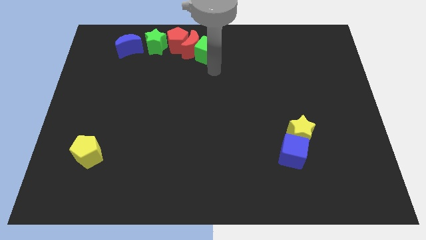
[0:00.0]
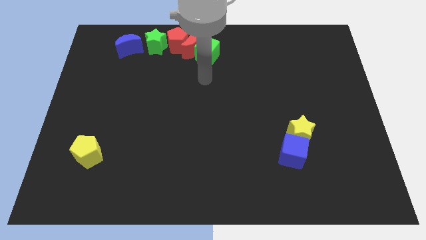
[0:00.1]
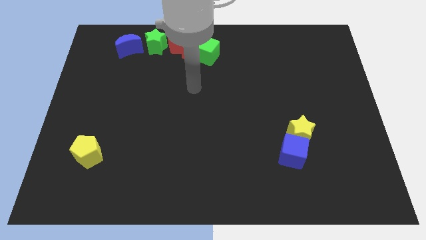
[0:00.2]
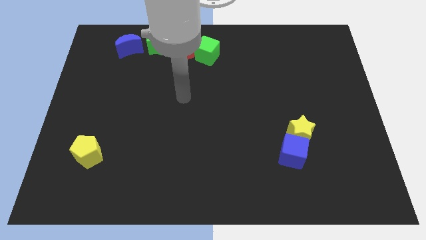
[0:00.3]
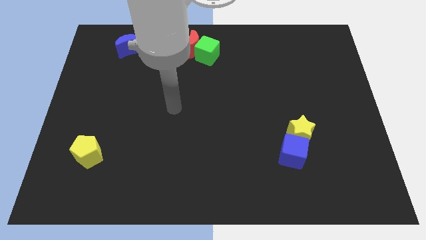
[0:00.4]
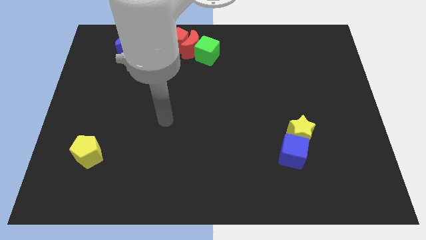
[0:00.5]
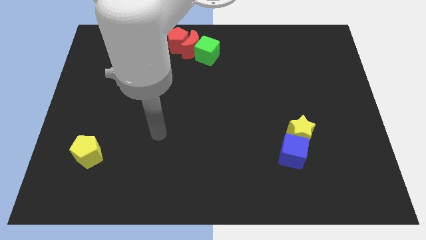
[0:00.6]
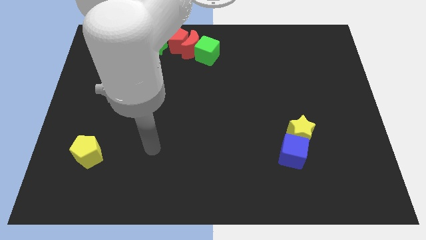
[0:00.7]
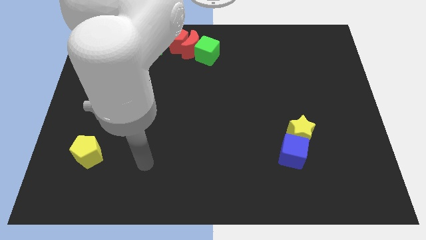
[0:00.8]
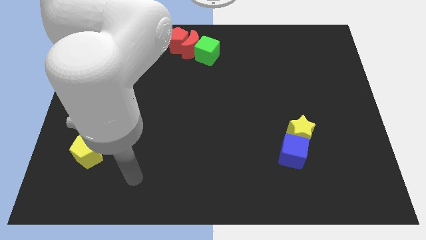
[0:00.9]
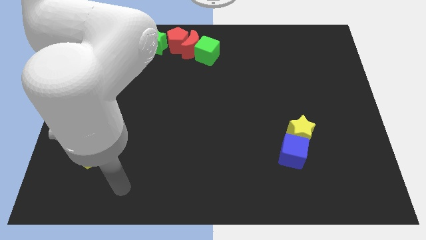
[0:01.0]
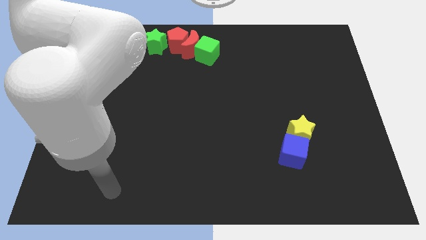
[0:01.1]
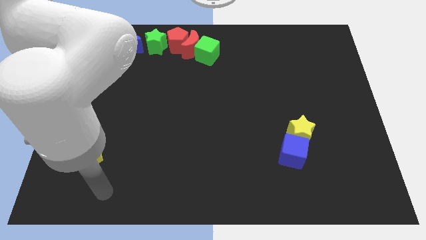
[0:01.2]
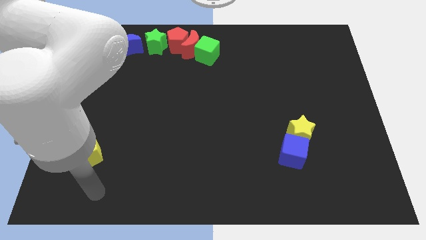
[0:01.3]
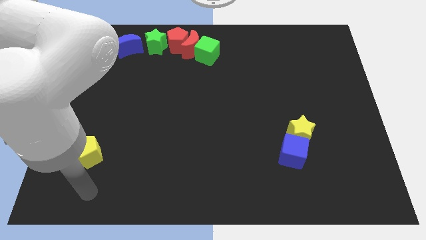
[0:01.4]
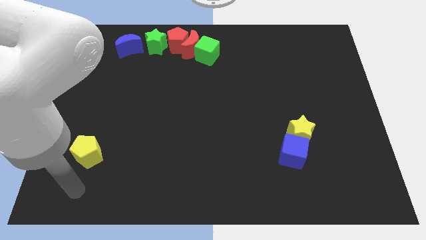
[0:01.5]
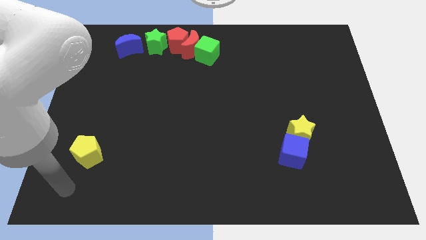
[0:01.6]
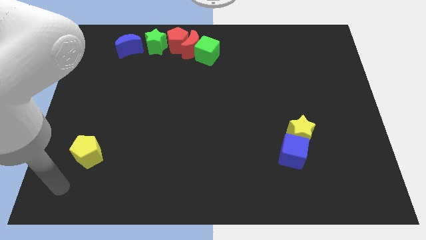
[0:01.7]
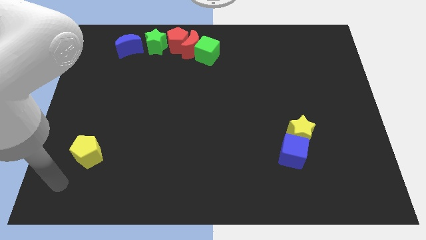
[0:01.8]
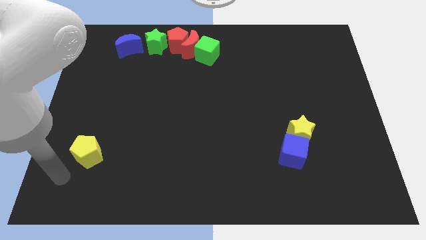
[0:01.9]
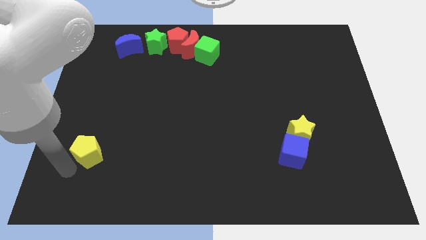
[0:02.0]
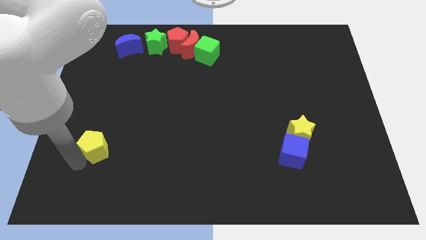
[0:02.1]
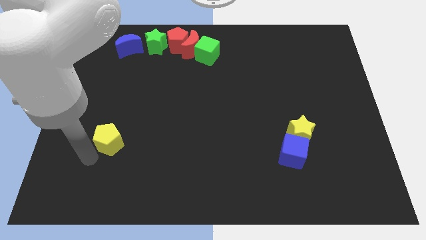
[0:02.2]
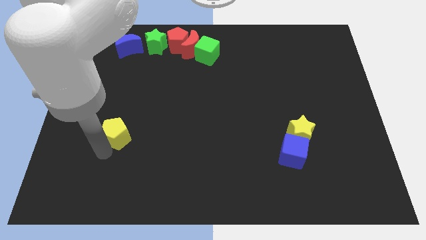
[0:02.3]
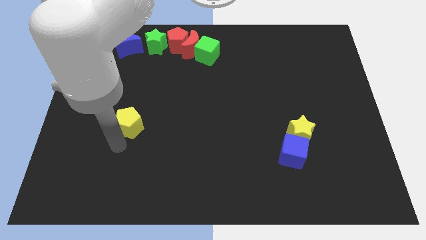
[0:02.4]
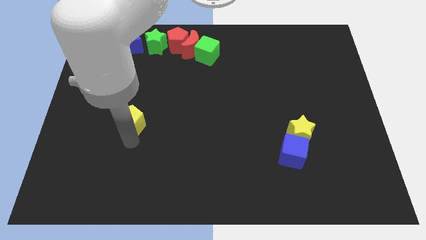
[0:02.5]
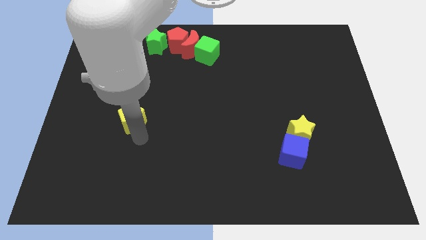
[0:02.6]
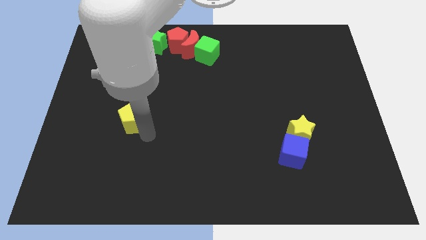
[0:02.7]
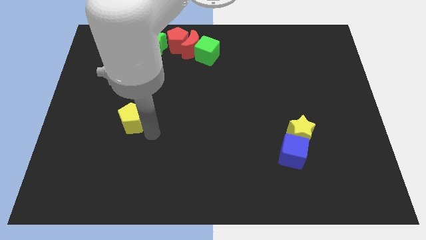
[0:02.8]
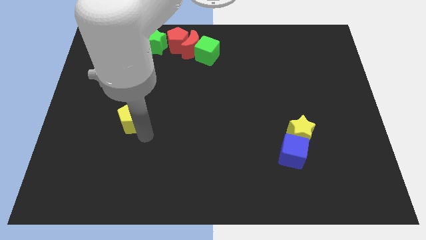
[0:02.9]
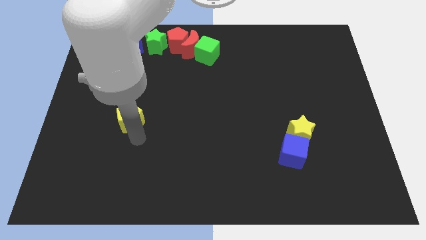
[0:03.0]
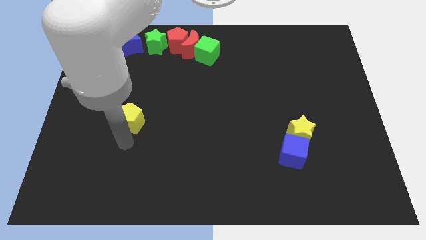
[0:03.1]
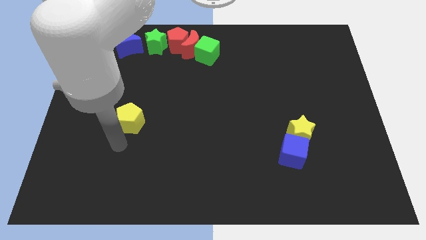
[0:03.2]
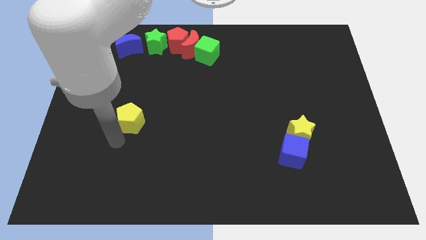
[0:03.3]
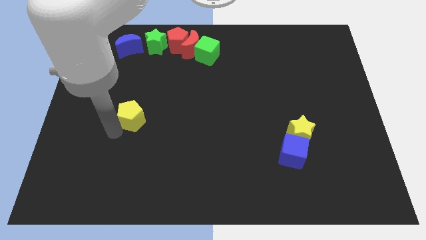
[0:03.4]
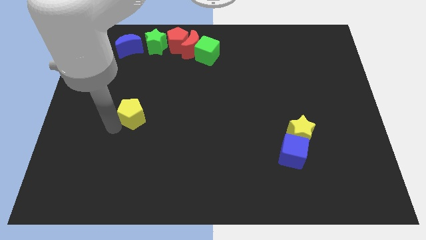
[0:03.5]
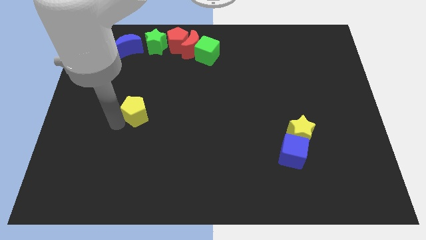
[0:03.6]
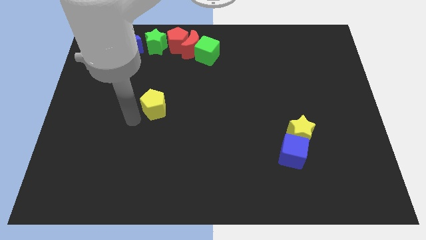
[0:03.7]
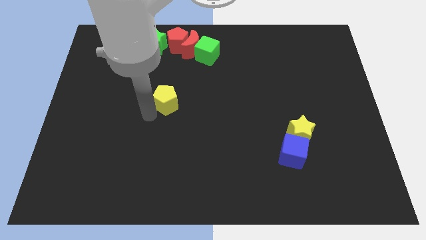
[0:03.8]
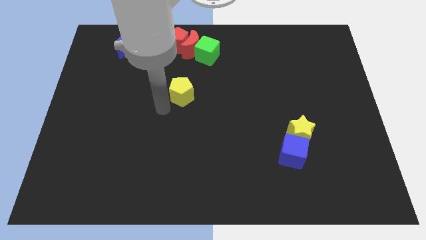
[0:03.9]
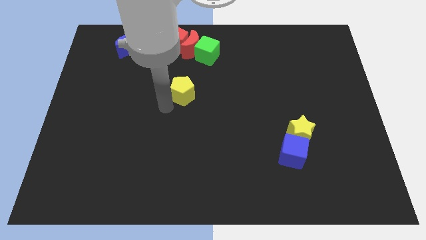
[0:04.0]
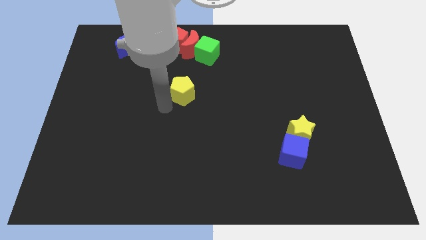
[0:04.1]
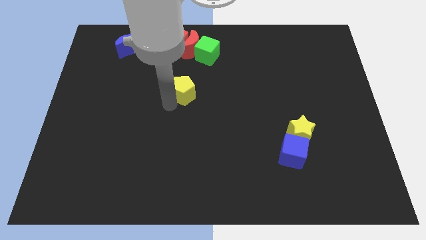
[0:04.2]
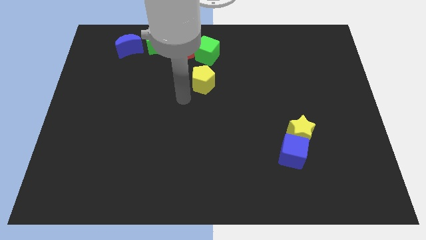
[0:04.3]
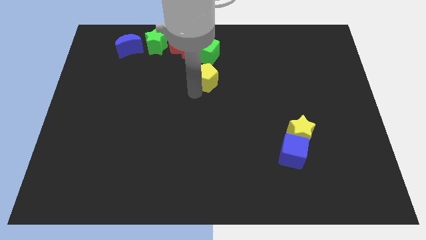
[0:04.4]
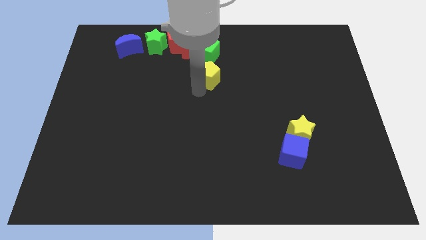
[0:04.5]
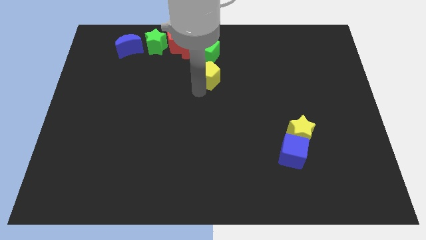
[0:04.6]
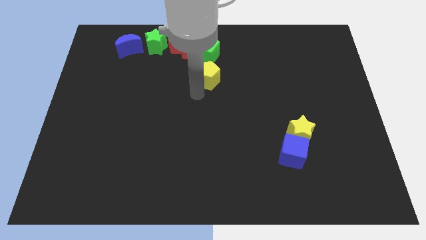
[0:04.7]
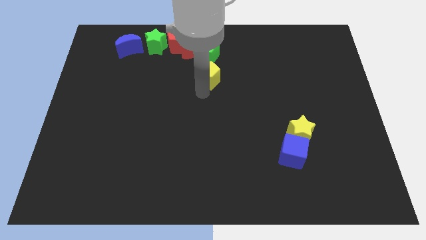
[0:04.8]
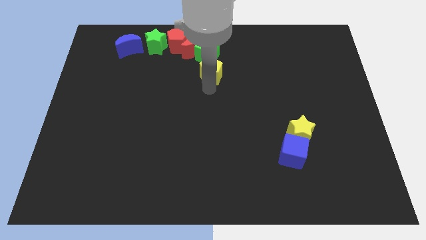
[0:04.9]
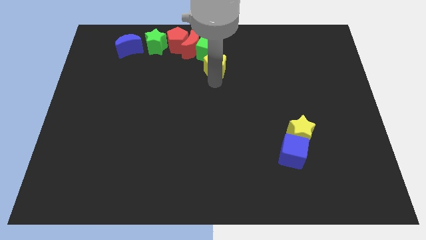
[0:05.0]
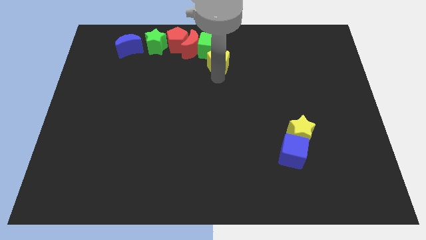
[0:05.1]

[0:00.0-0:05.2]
drag the yellow pentagon into the bottom side of the green cube

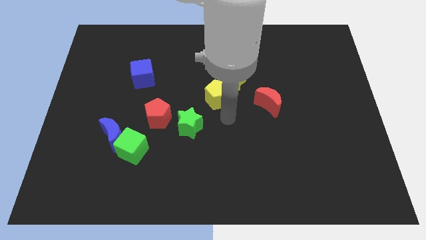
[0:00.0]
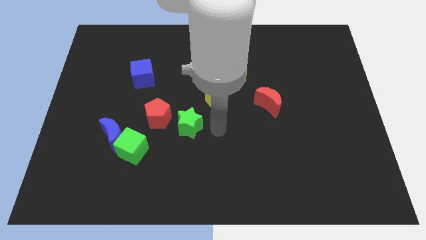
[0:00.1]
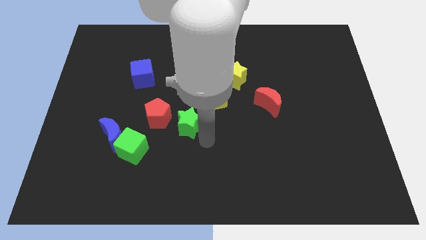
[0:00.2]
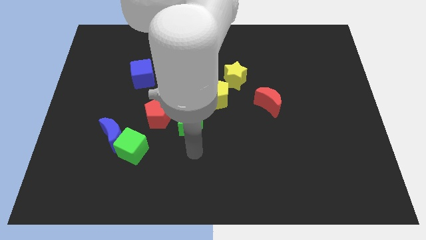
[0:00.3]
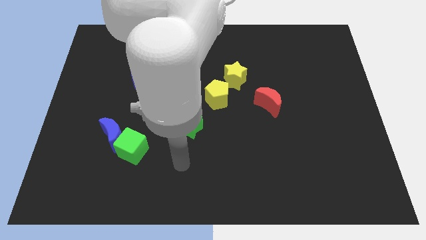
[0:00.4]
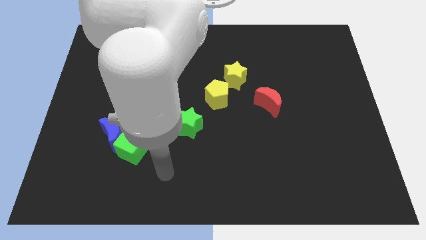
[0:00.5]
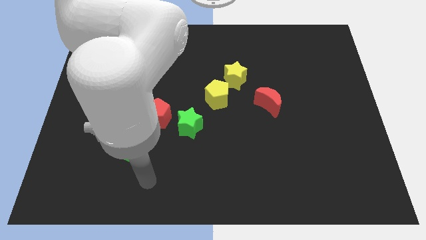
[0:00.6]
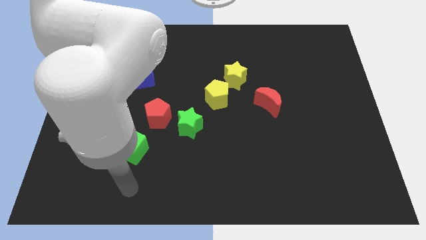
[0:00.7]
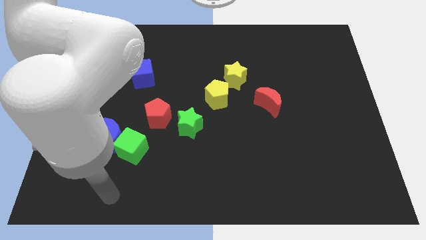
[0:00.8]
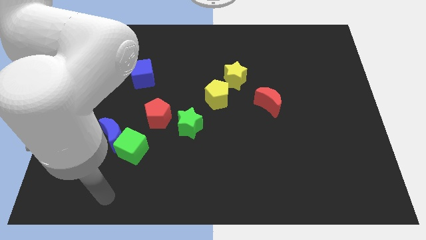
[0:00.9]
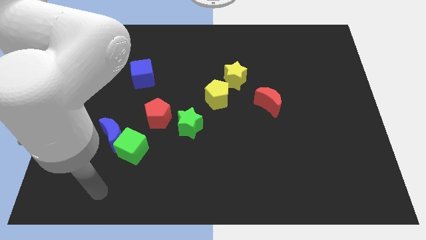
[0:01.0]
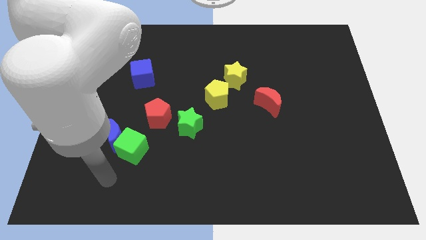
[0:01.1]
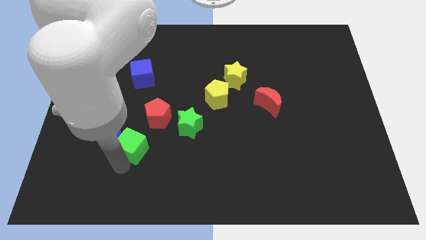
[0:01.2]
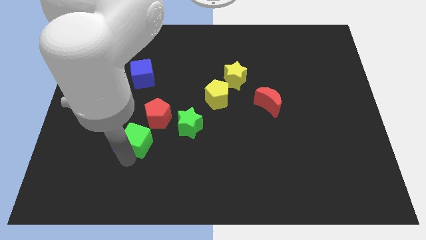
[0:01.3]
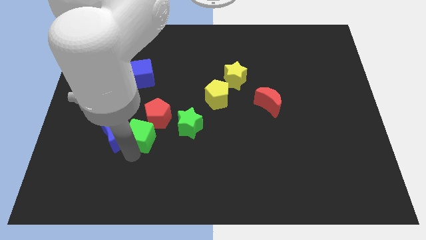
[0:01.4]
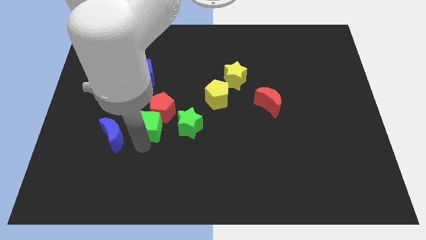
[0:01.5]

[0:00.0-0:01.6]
drag the green cube into the bottom side of the red pentagon

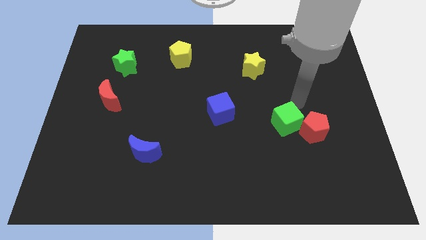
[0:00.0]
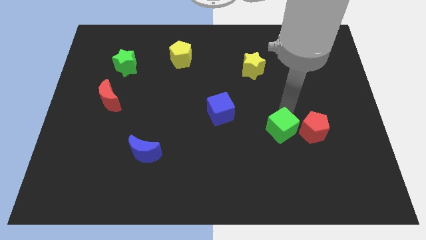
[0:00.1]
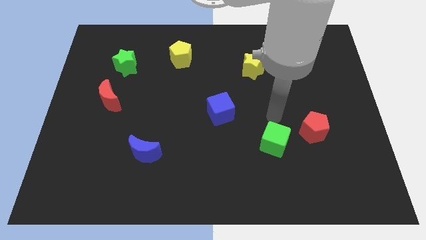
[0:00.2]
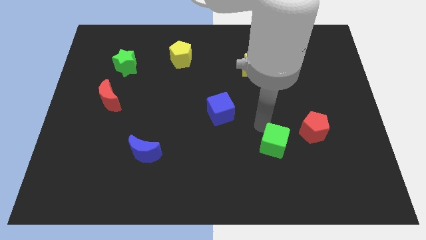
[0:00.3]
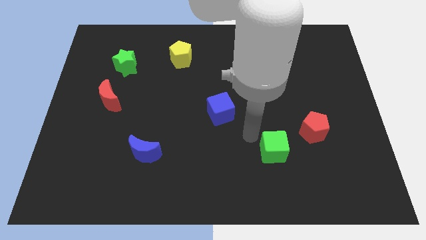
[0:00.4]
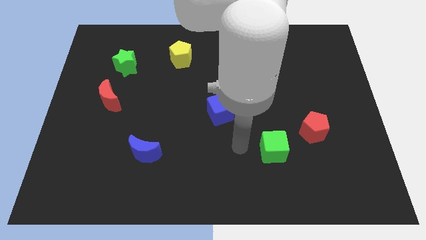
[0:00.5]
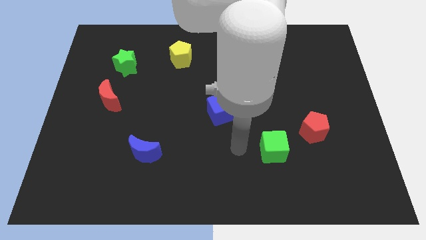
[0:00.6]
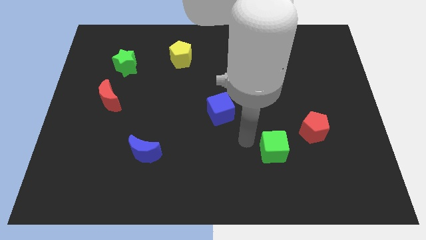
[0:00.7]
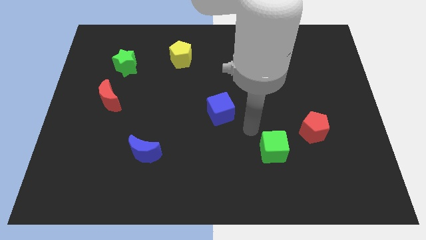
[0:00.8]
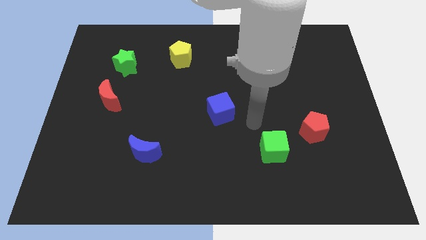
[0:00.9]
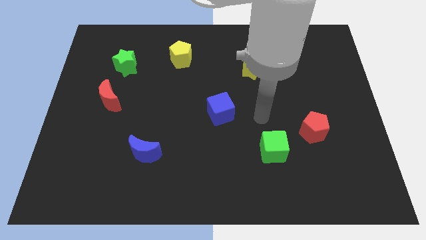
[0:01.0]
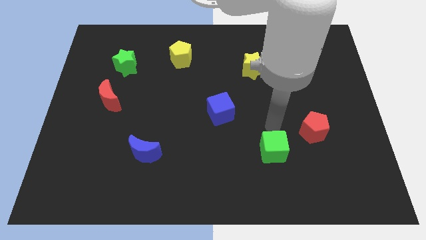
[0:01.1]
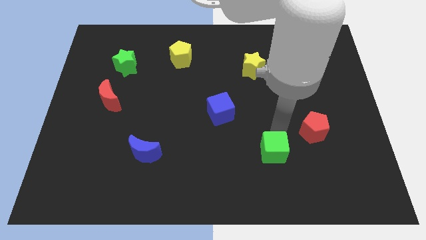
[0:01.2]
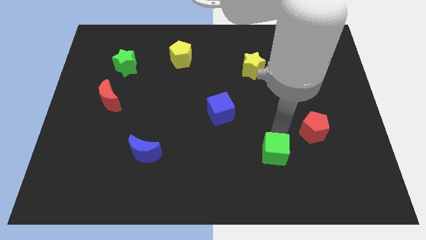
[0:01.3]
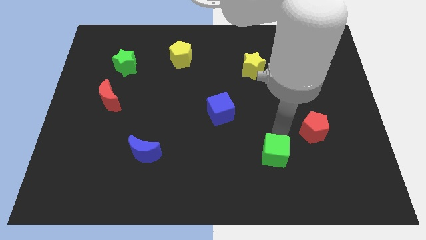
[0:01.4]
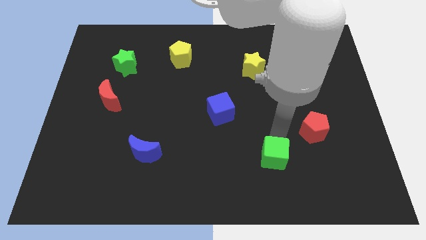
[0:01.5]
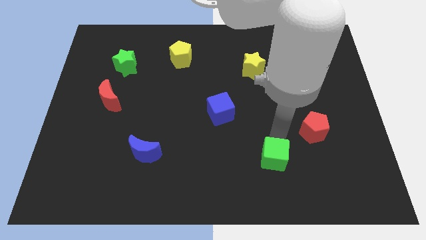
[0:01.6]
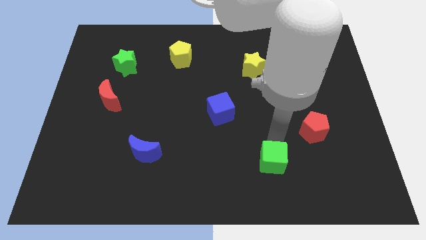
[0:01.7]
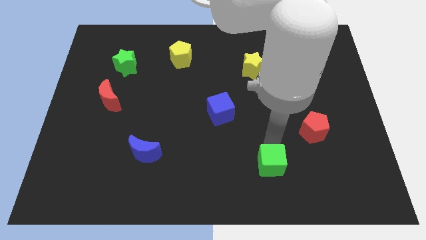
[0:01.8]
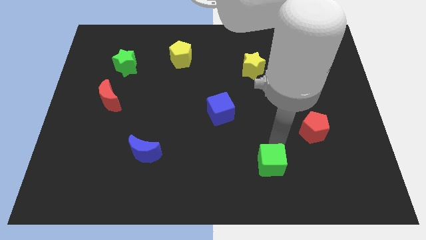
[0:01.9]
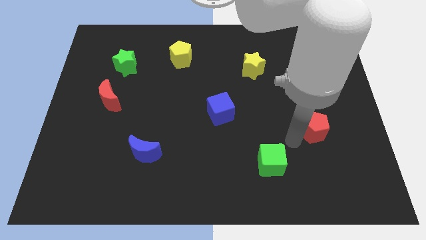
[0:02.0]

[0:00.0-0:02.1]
slightly push the green cube in the downward direction
